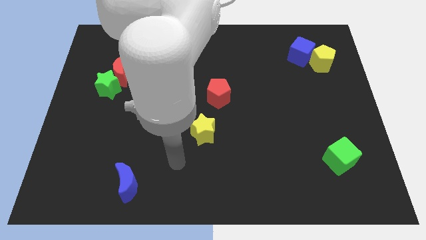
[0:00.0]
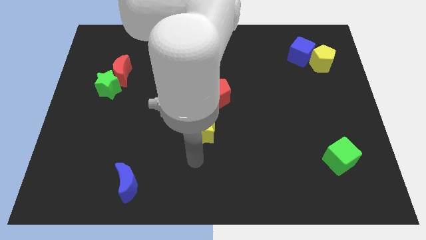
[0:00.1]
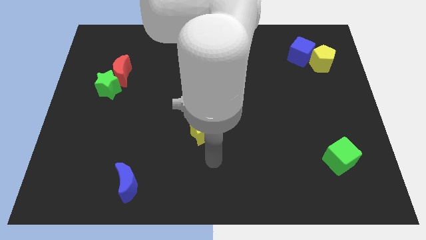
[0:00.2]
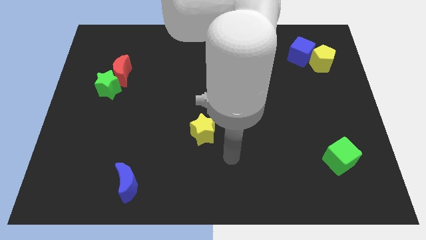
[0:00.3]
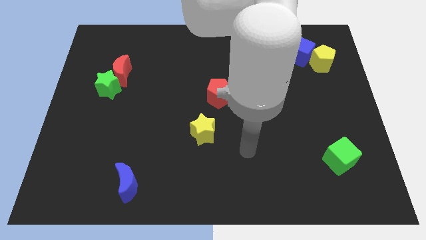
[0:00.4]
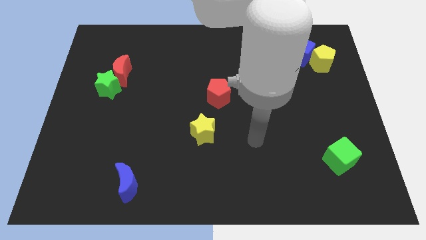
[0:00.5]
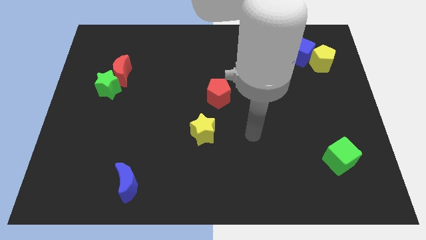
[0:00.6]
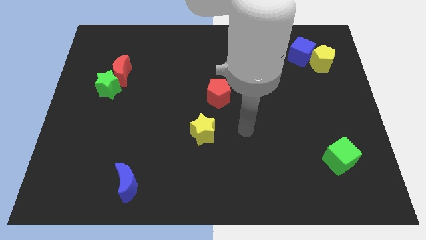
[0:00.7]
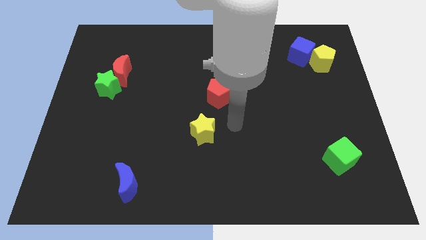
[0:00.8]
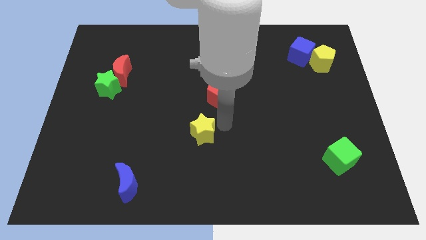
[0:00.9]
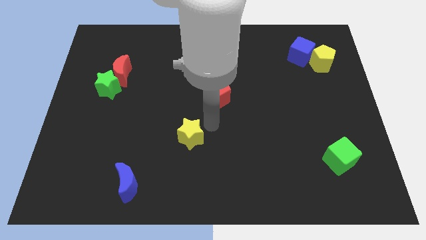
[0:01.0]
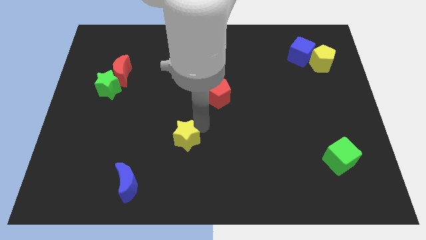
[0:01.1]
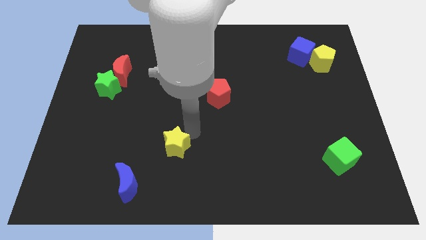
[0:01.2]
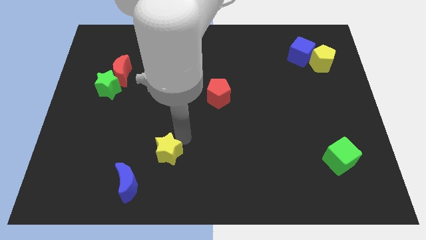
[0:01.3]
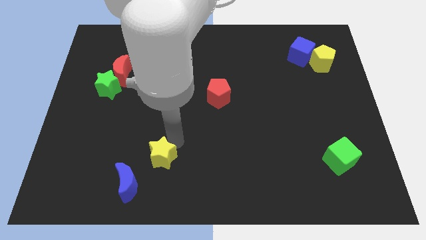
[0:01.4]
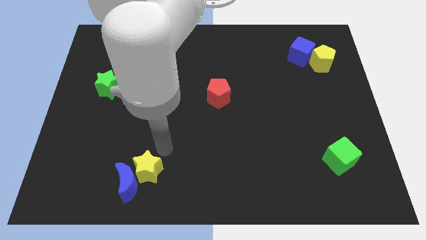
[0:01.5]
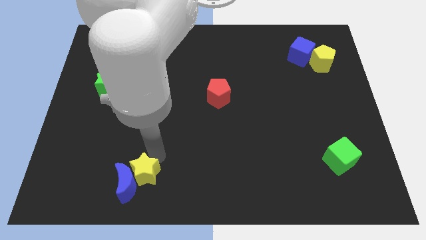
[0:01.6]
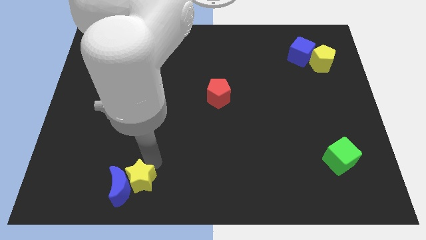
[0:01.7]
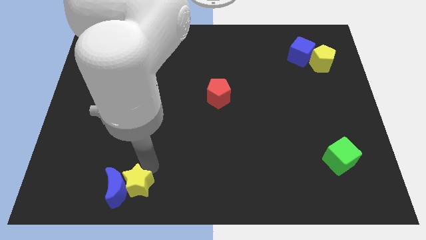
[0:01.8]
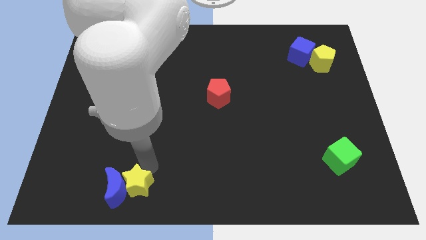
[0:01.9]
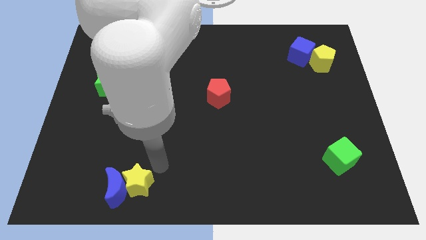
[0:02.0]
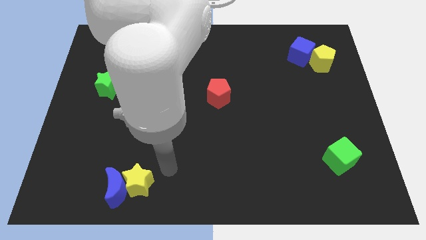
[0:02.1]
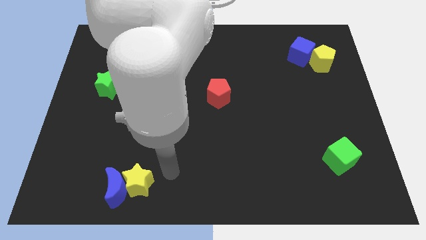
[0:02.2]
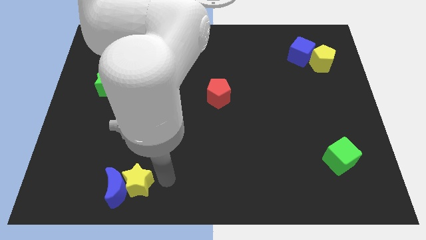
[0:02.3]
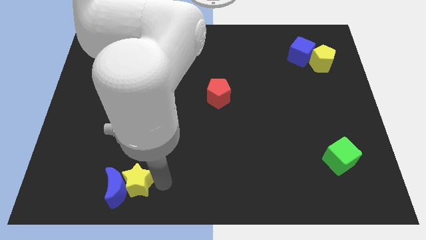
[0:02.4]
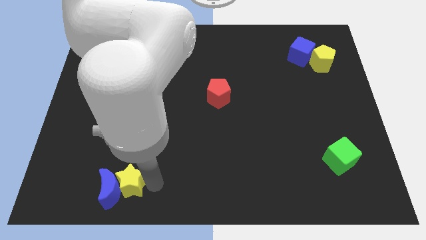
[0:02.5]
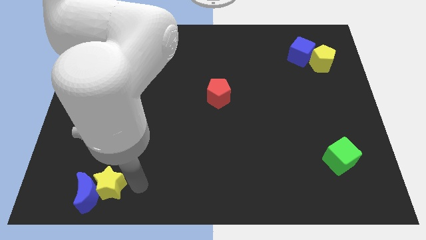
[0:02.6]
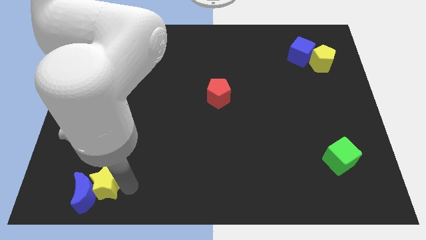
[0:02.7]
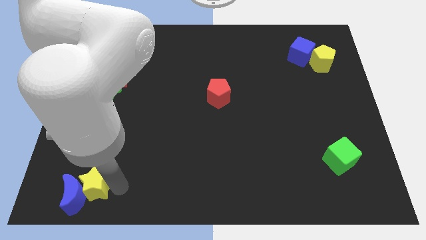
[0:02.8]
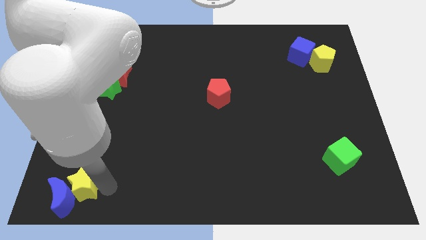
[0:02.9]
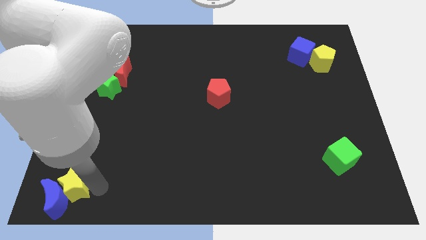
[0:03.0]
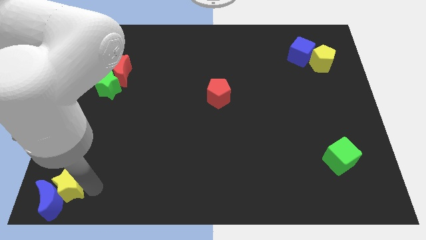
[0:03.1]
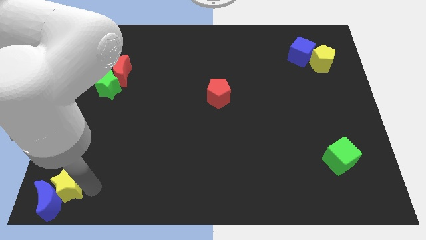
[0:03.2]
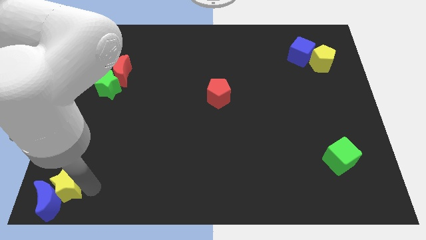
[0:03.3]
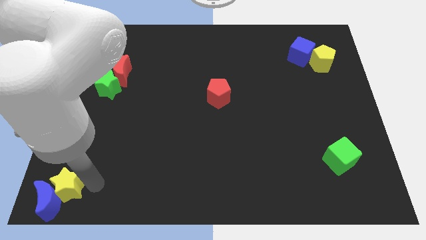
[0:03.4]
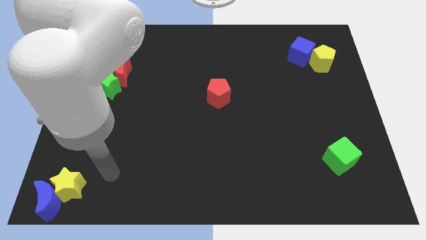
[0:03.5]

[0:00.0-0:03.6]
move the blue cube along with the yellow star to the bottom left corner of the board

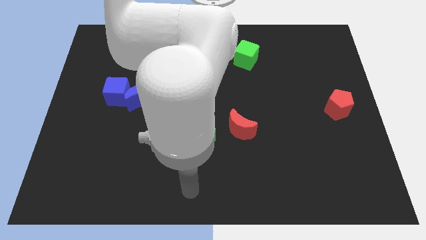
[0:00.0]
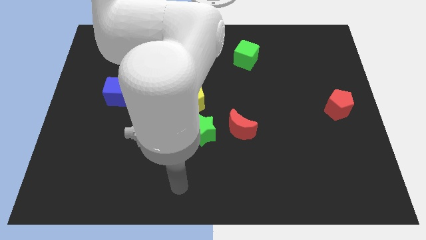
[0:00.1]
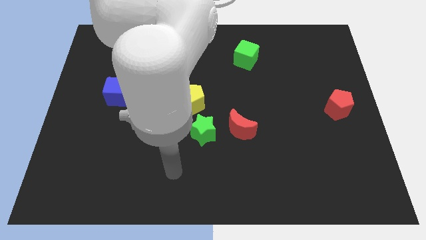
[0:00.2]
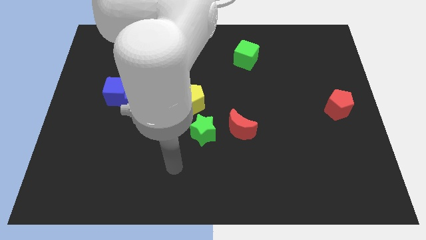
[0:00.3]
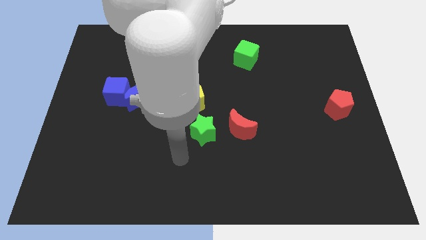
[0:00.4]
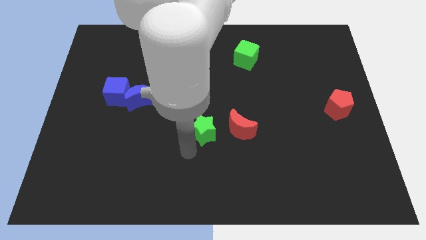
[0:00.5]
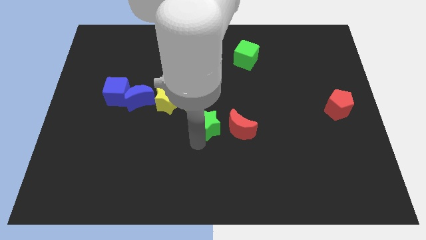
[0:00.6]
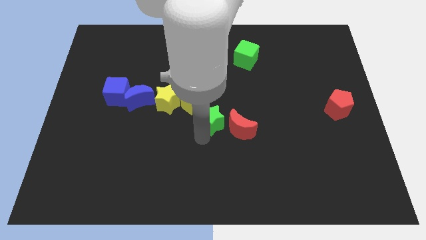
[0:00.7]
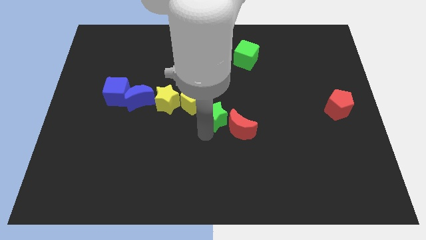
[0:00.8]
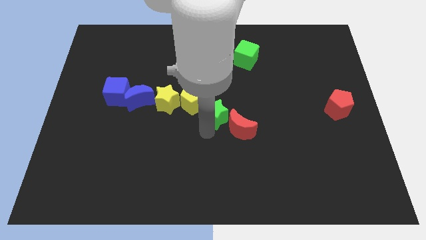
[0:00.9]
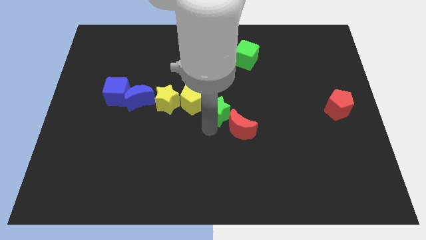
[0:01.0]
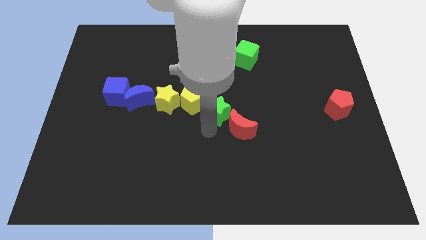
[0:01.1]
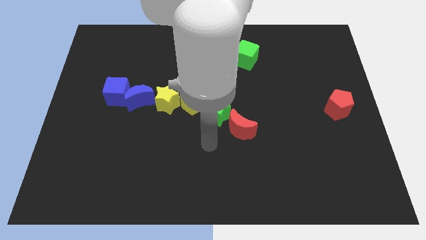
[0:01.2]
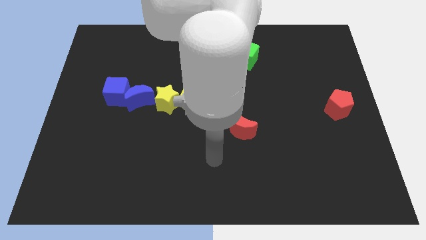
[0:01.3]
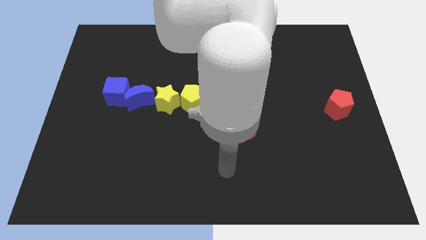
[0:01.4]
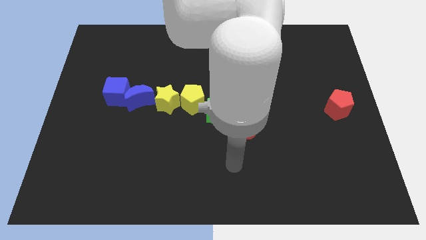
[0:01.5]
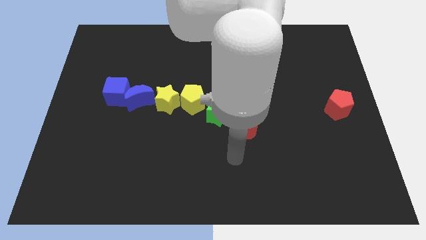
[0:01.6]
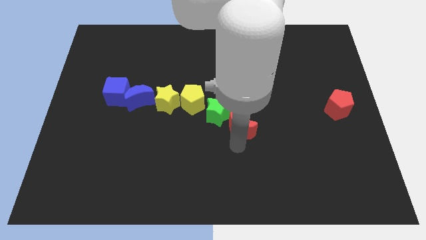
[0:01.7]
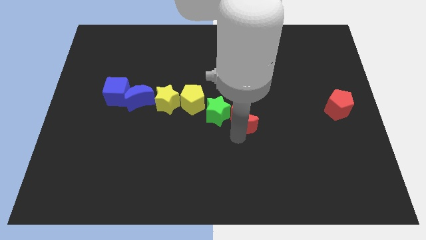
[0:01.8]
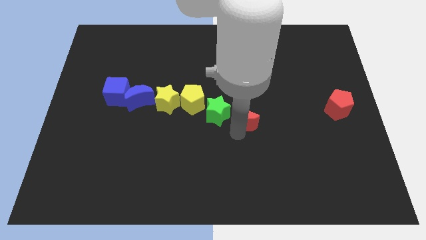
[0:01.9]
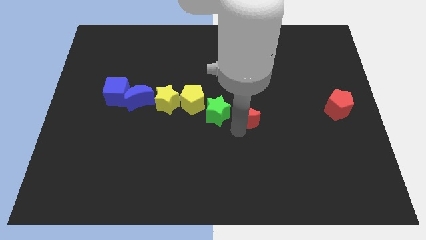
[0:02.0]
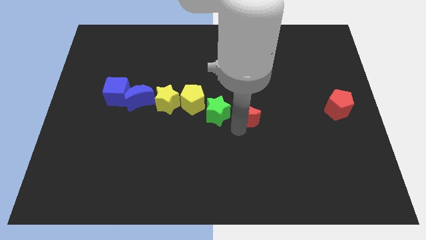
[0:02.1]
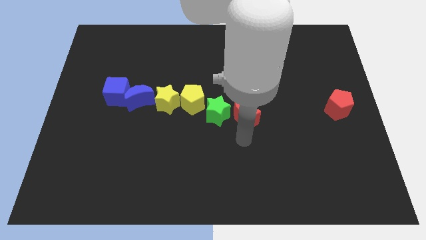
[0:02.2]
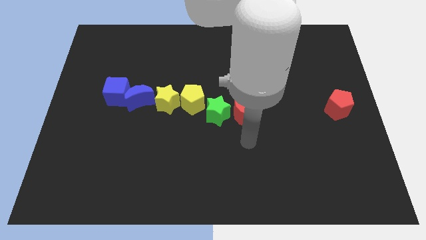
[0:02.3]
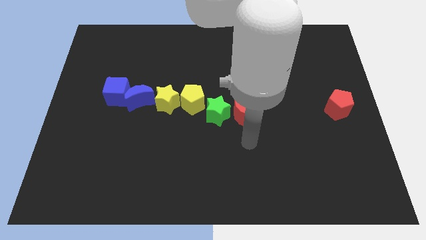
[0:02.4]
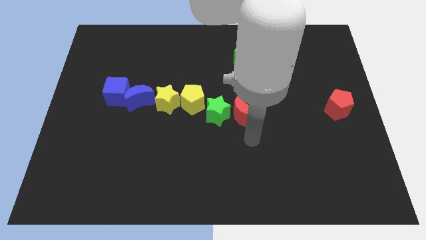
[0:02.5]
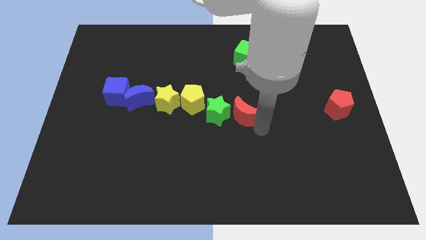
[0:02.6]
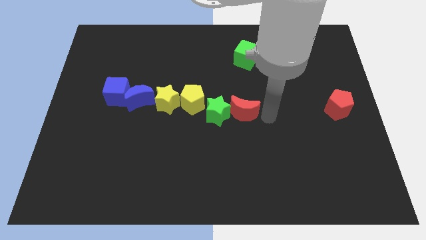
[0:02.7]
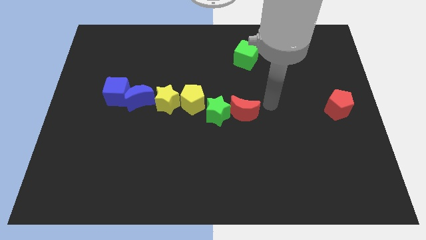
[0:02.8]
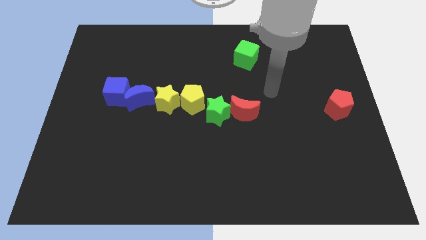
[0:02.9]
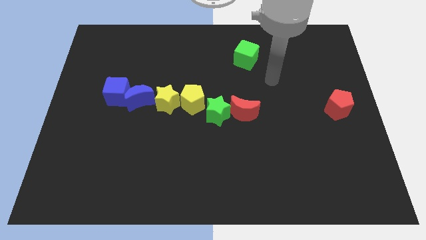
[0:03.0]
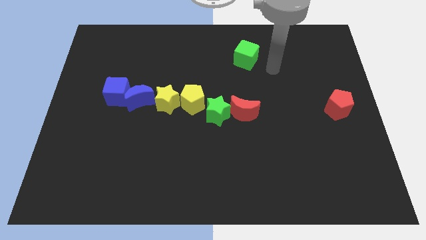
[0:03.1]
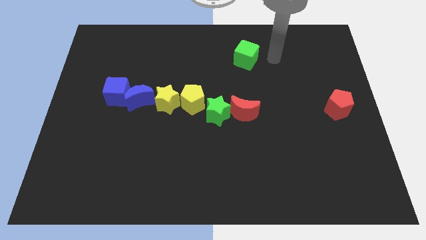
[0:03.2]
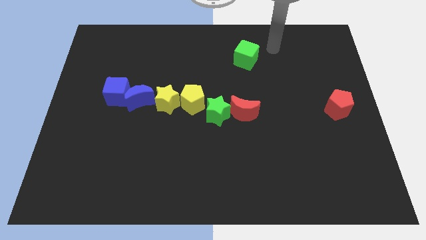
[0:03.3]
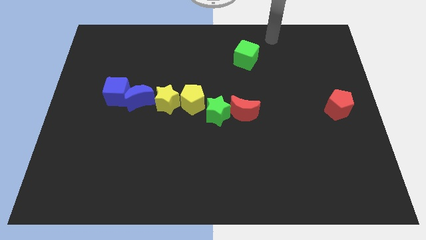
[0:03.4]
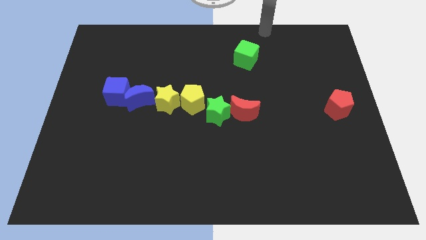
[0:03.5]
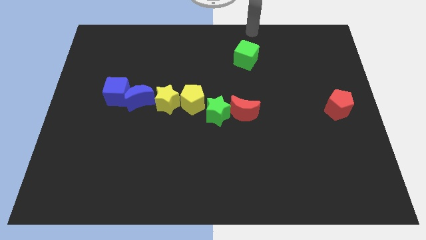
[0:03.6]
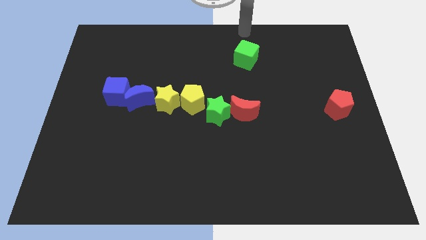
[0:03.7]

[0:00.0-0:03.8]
put the green star

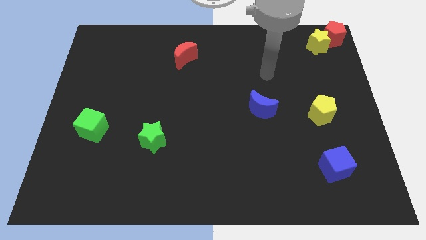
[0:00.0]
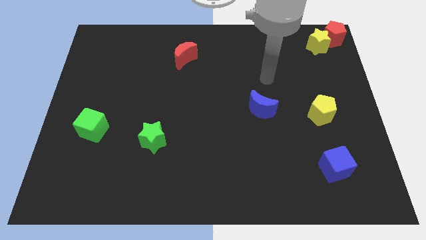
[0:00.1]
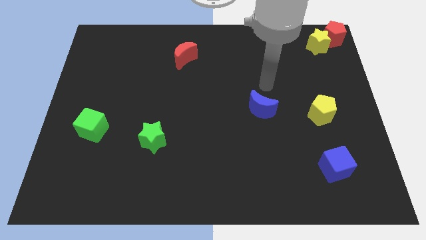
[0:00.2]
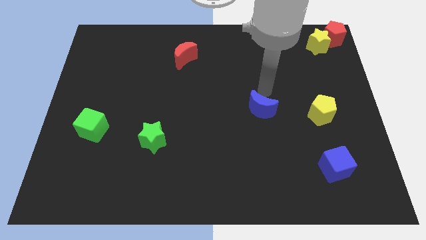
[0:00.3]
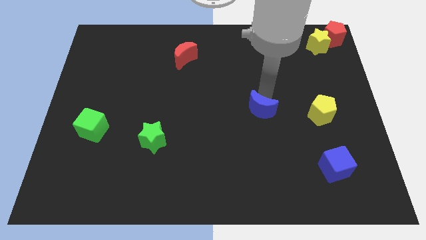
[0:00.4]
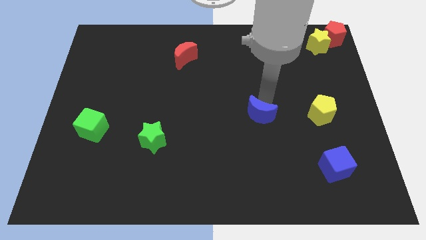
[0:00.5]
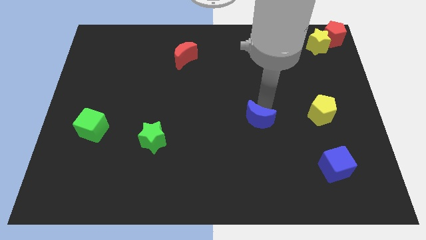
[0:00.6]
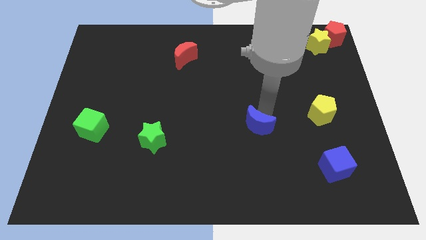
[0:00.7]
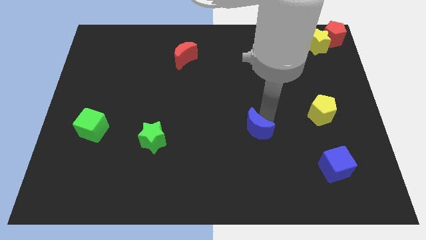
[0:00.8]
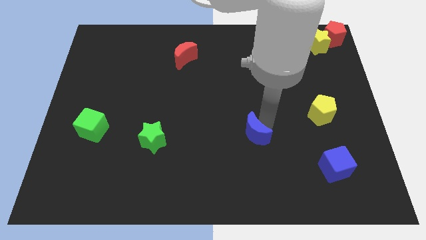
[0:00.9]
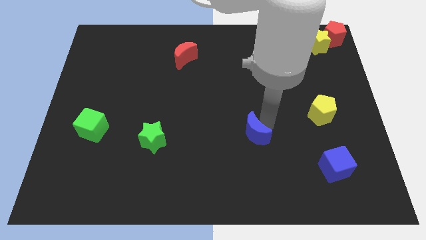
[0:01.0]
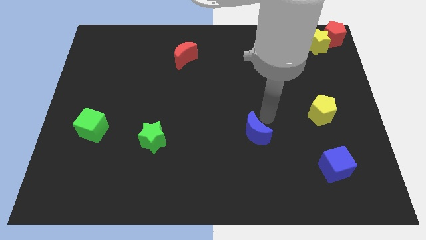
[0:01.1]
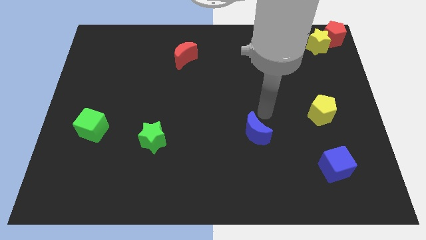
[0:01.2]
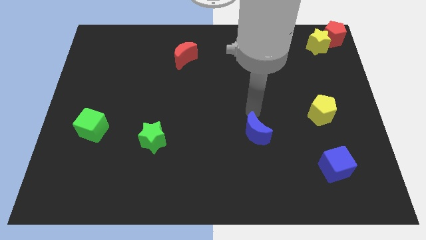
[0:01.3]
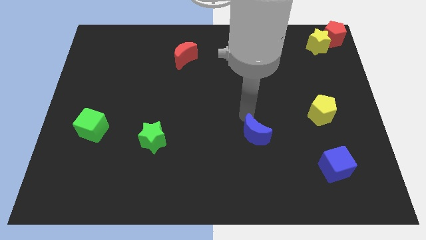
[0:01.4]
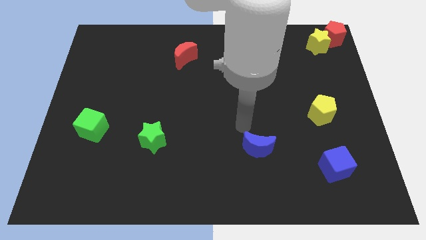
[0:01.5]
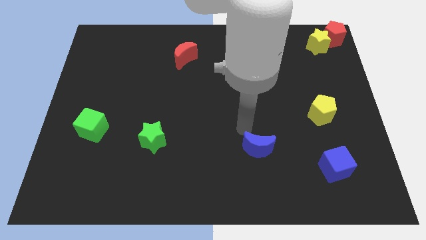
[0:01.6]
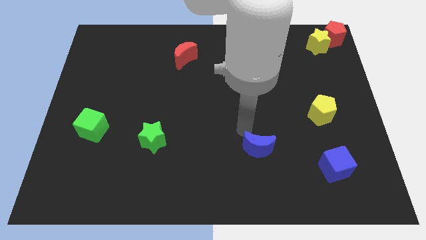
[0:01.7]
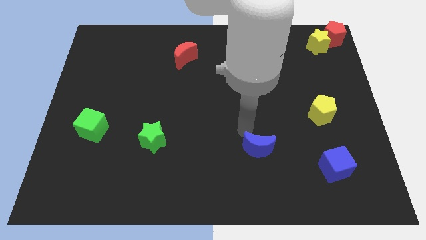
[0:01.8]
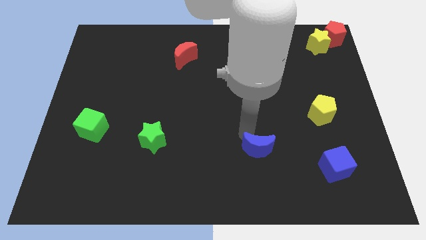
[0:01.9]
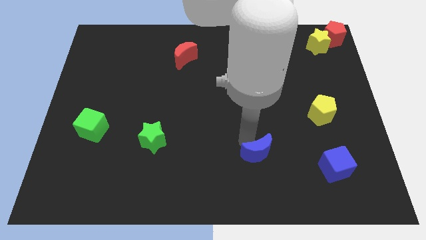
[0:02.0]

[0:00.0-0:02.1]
place the blue crescent horizontally to the left of the blue cube
